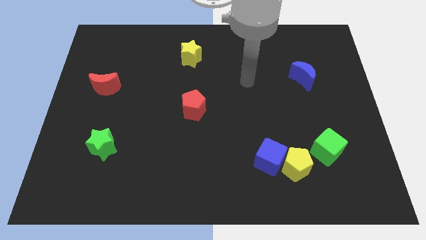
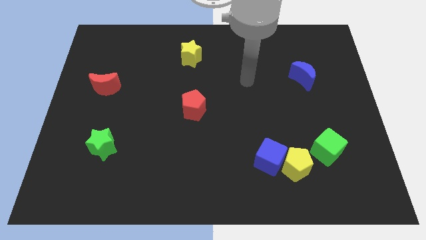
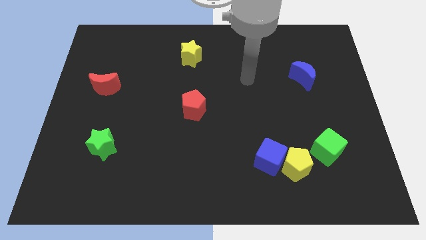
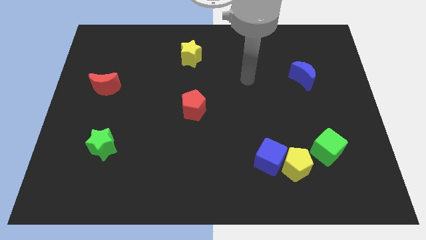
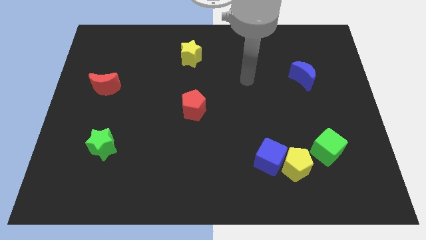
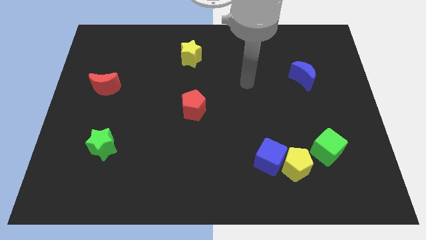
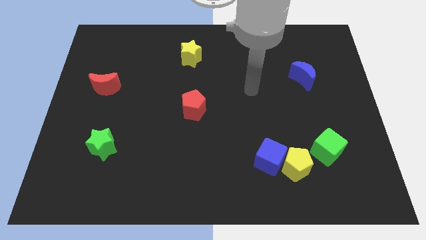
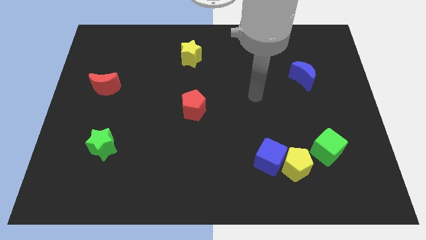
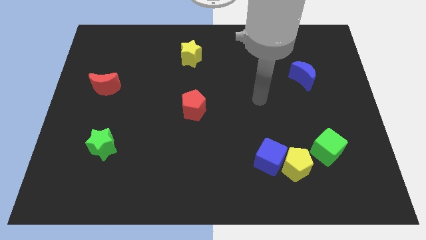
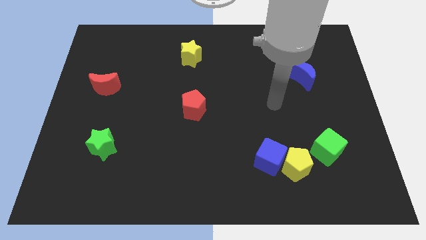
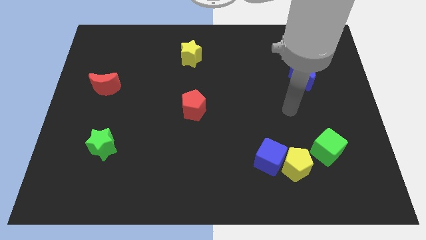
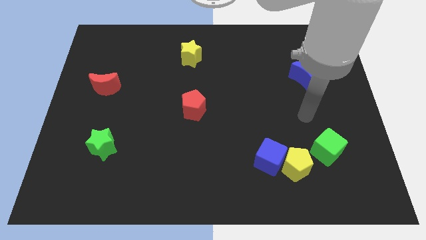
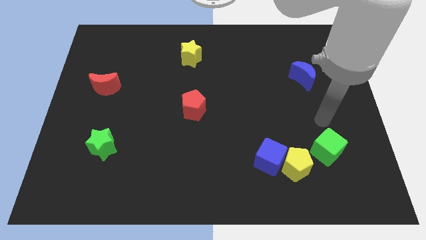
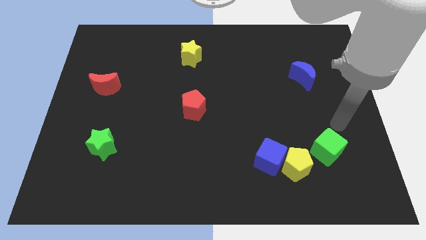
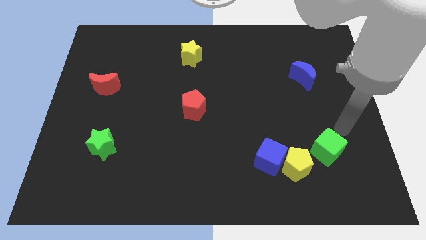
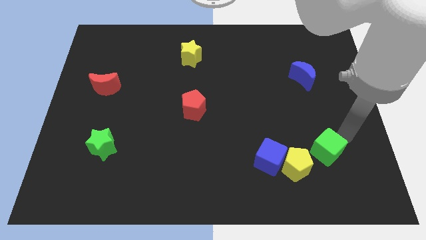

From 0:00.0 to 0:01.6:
place your arm right to green cube

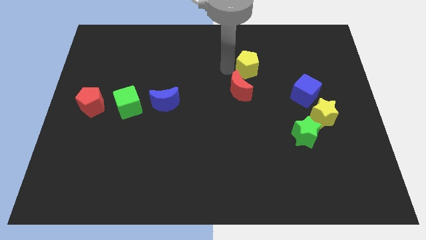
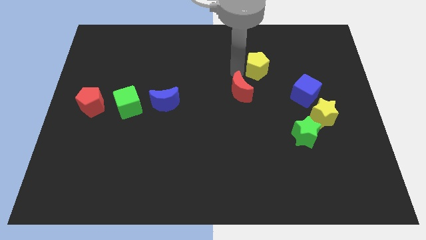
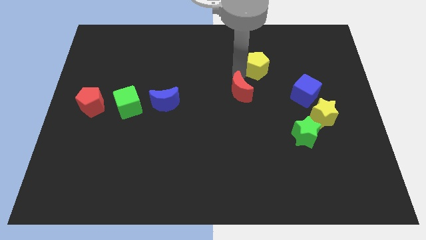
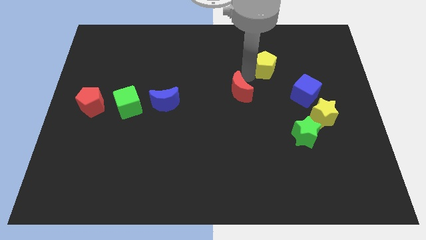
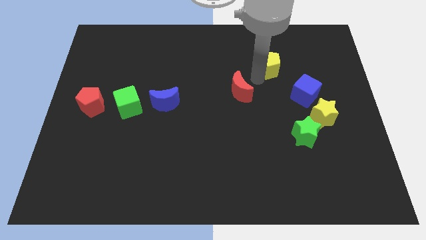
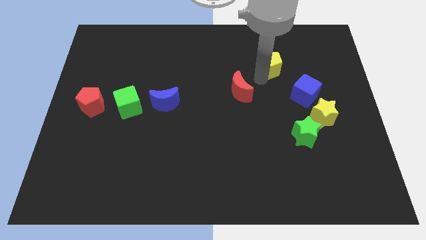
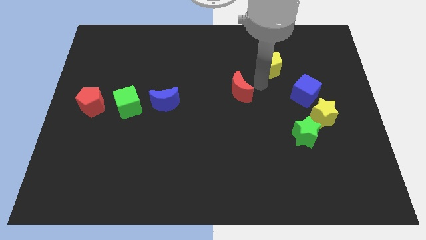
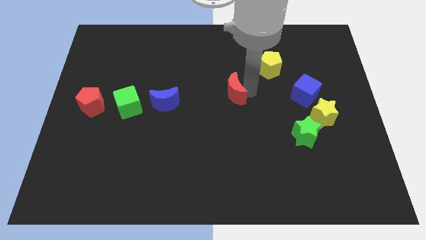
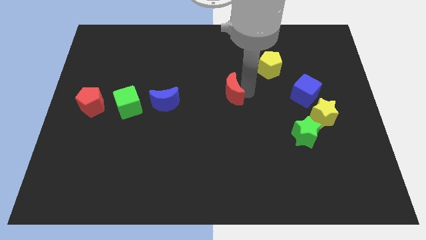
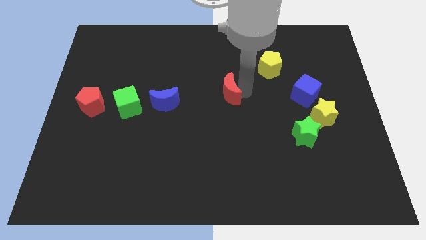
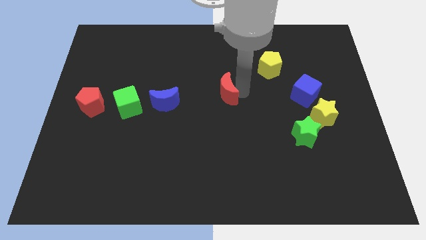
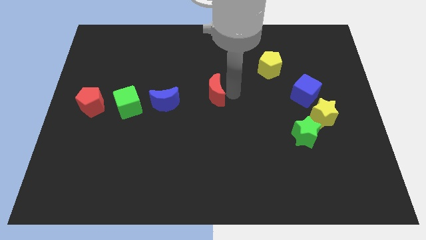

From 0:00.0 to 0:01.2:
separate the yellow pentagon with red crescent

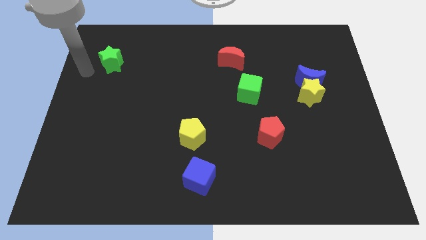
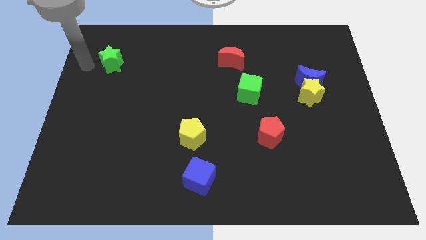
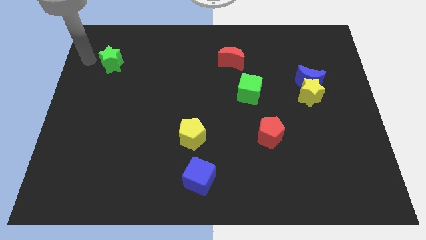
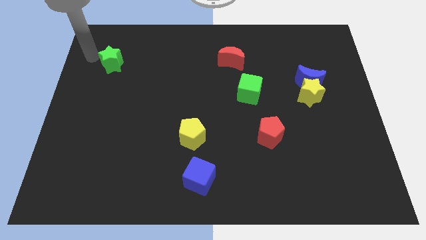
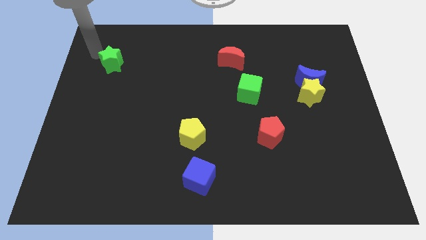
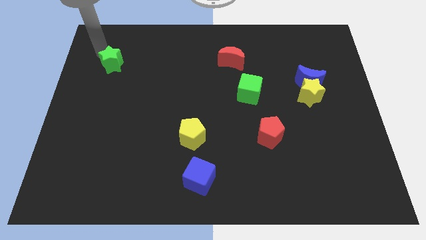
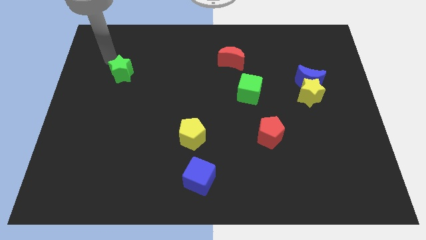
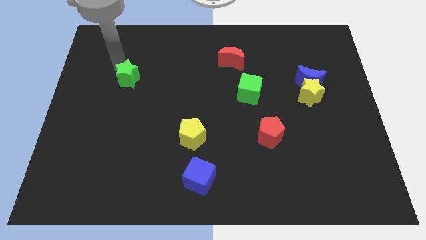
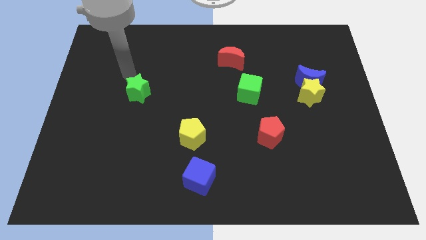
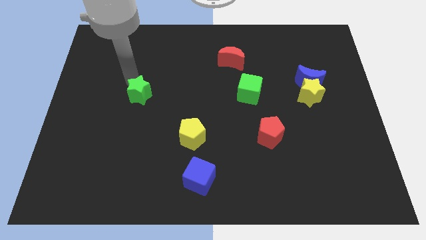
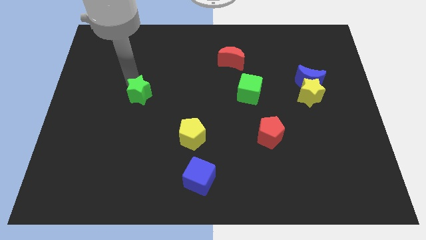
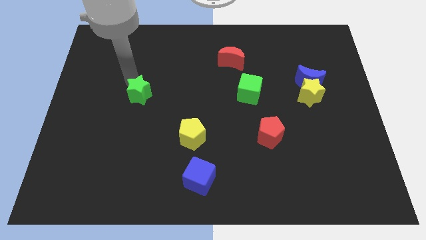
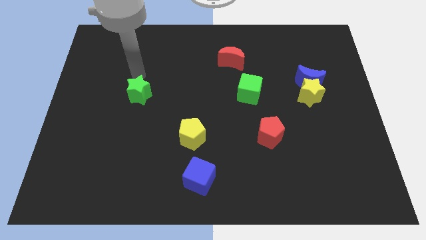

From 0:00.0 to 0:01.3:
move the green star diagonally above the top left side of the yellow pentagon

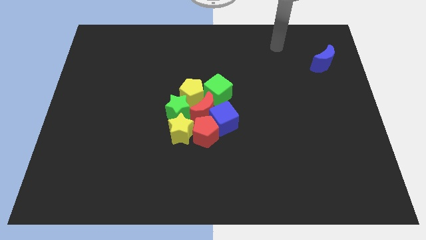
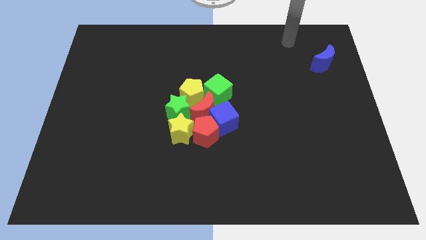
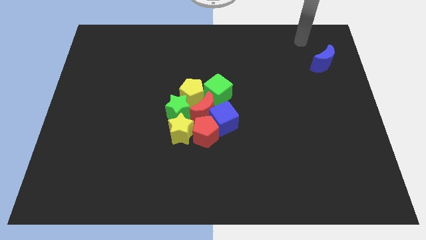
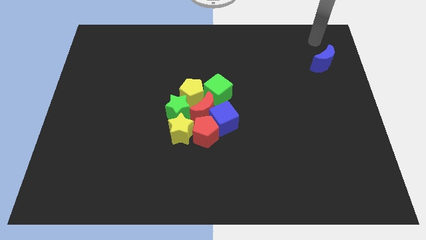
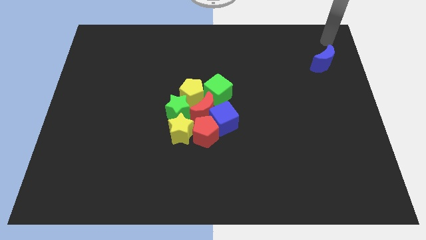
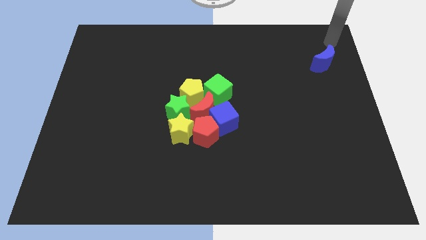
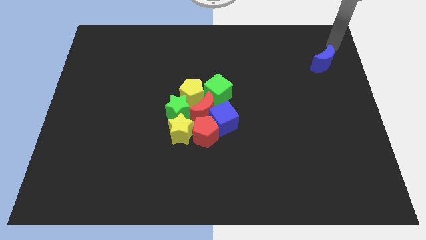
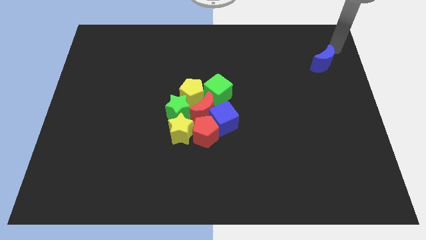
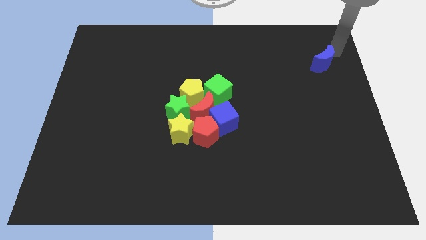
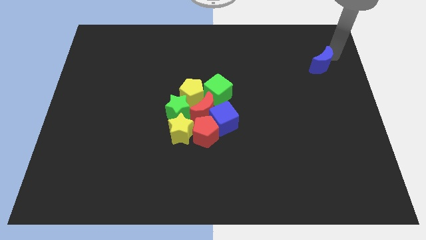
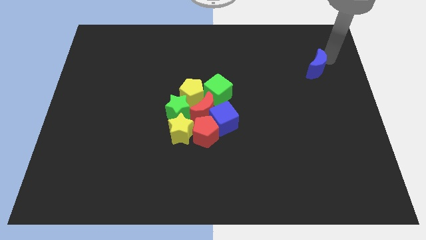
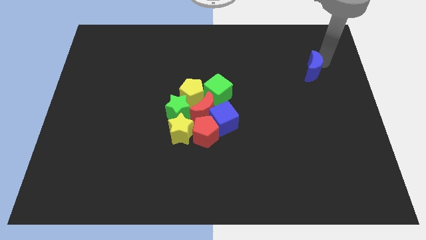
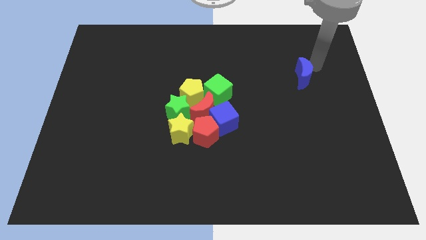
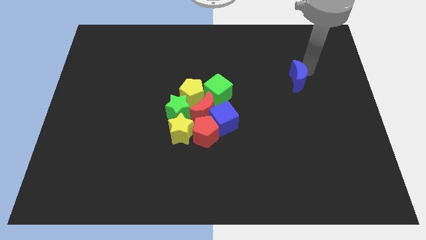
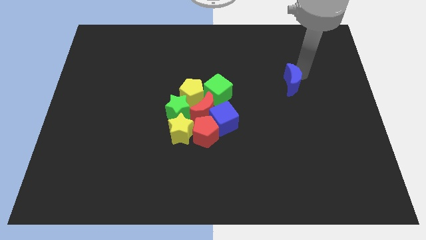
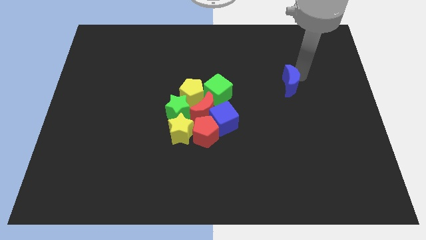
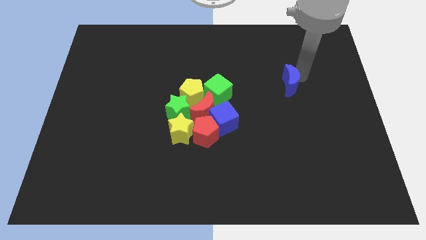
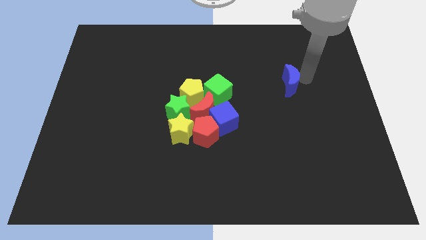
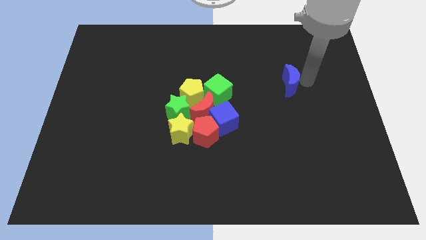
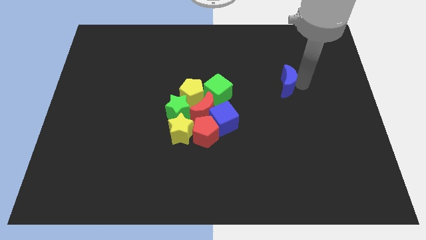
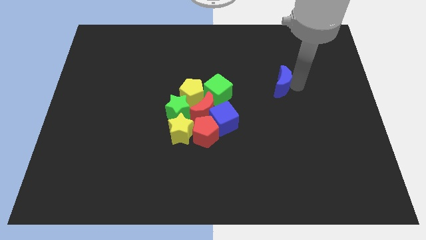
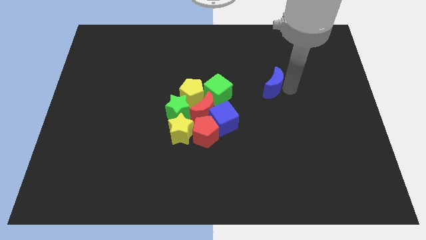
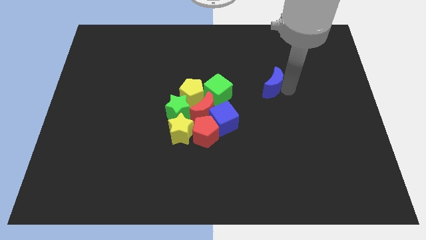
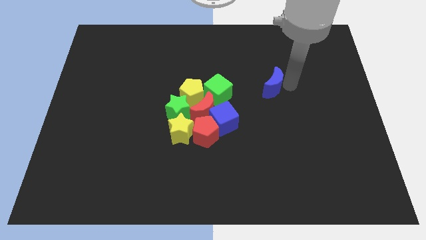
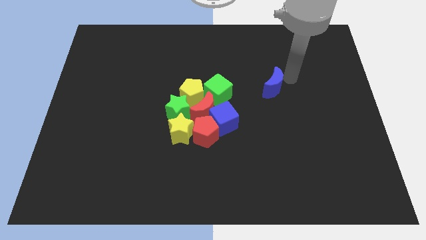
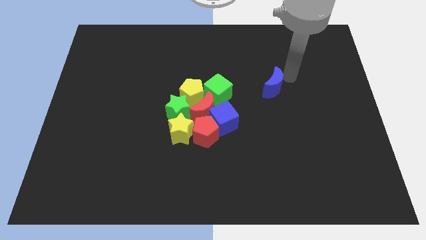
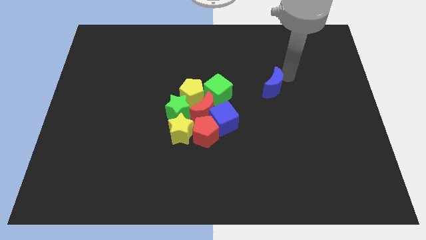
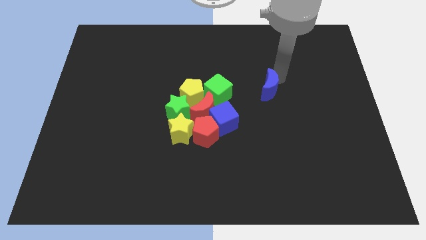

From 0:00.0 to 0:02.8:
move blue moon towards the green cube

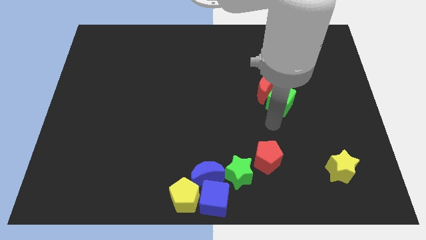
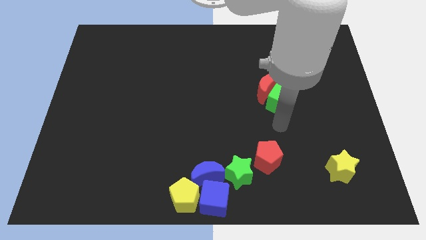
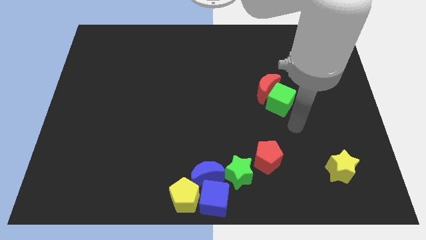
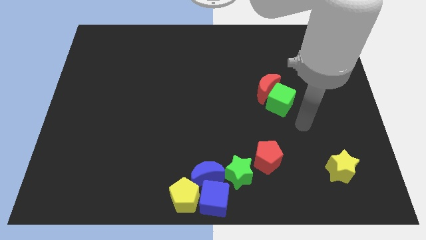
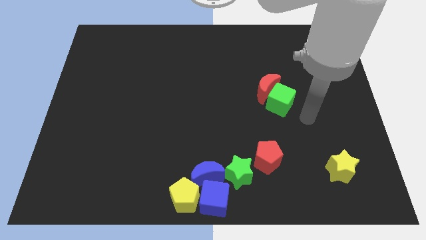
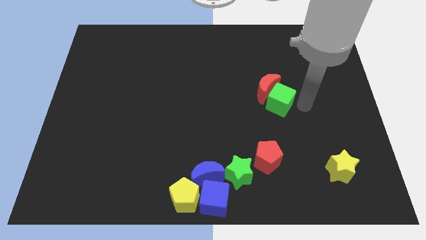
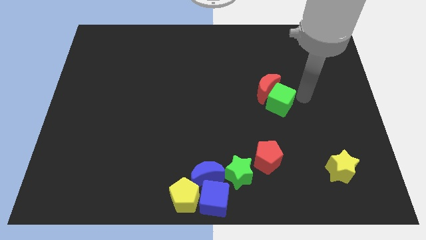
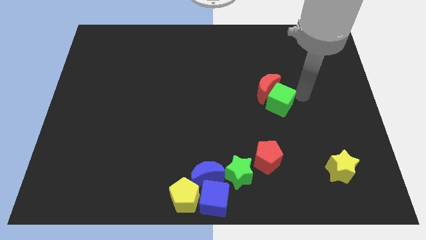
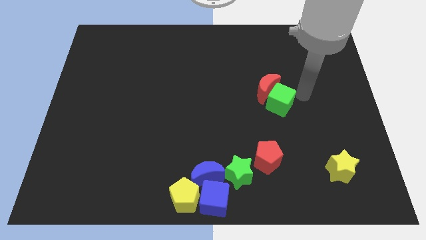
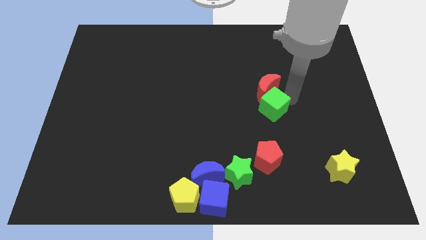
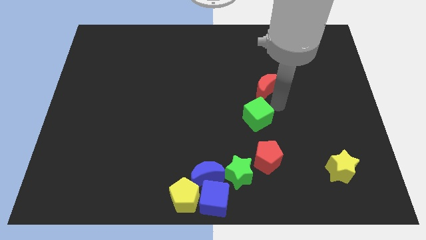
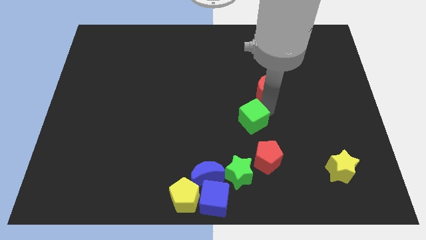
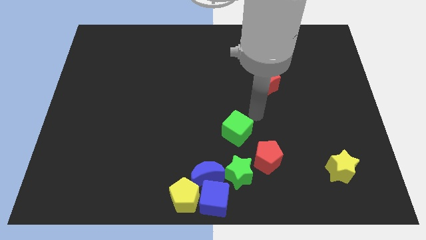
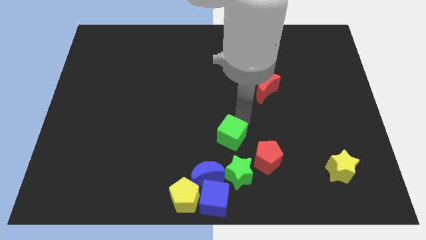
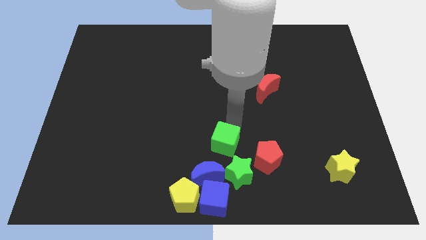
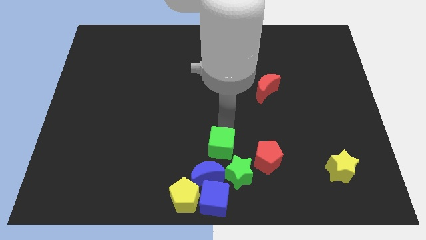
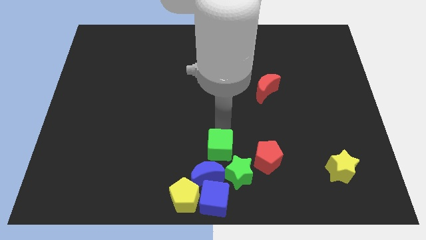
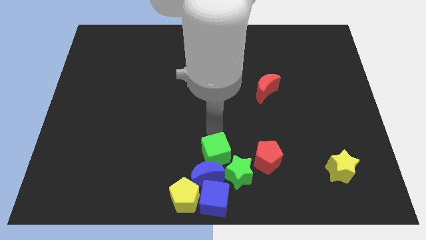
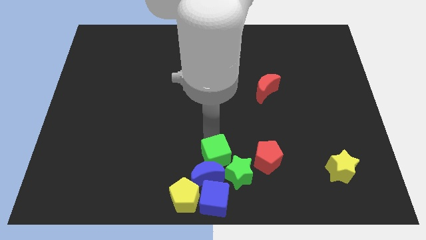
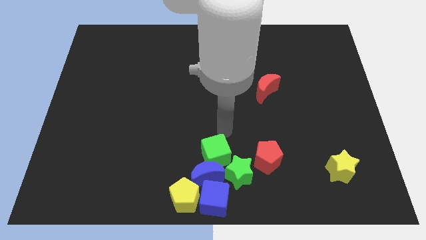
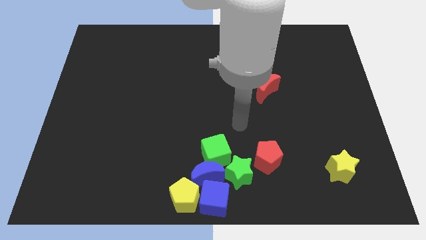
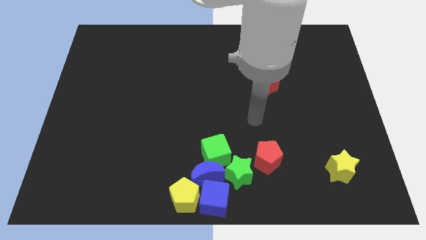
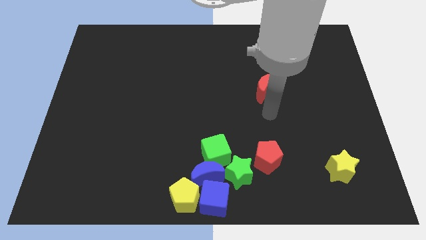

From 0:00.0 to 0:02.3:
place the green cube above the blue crescent
